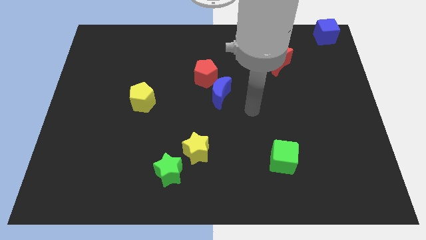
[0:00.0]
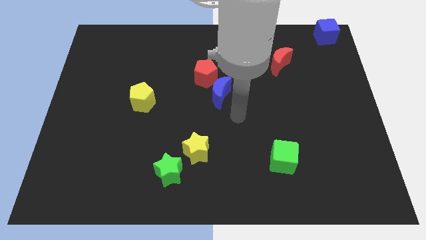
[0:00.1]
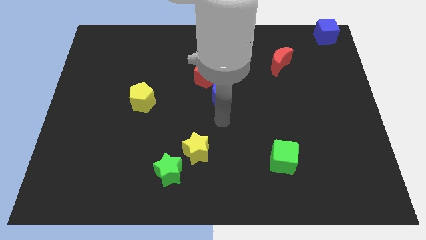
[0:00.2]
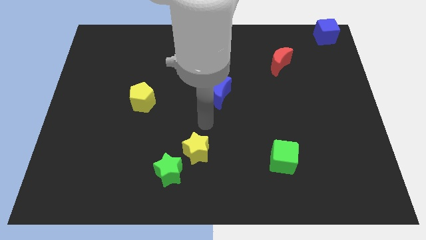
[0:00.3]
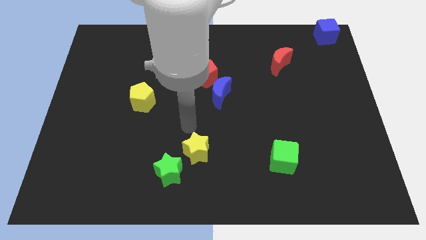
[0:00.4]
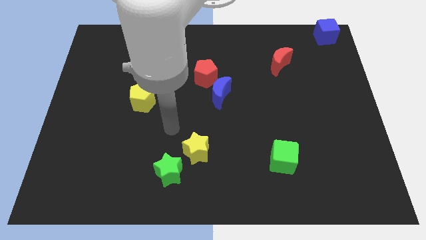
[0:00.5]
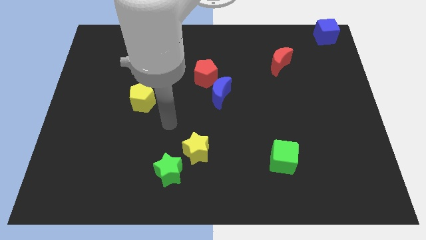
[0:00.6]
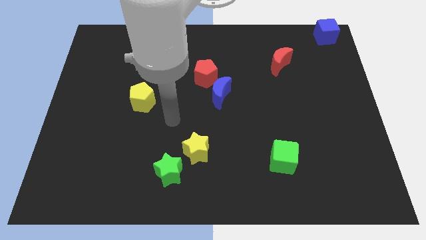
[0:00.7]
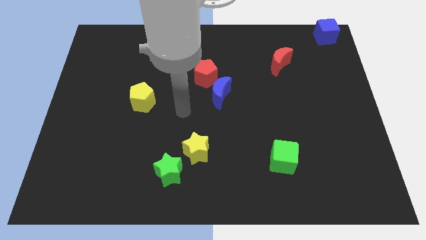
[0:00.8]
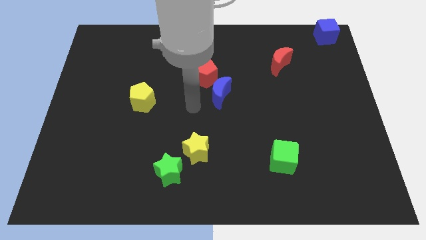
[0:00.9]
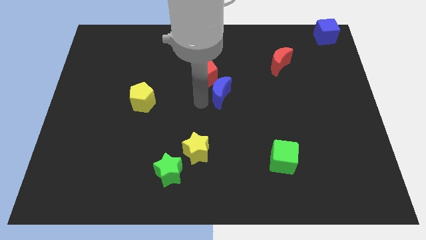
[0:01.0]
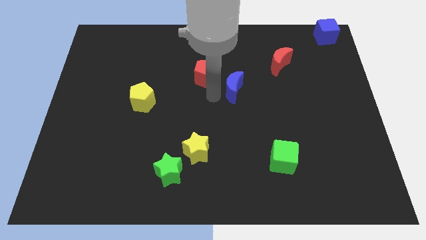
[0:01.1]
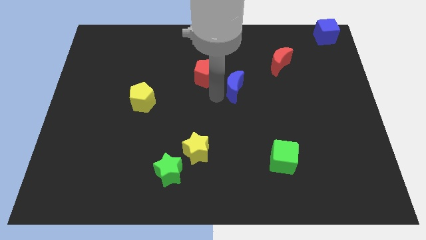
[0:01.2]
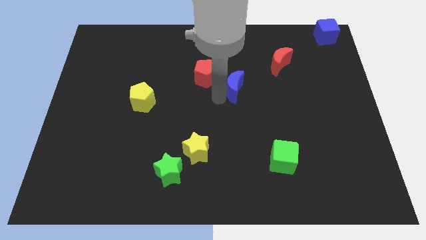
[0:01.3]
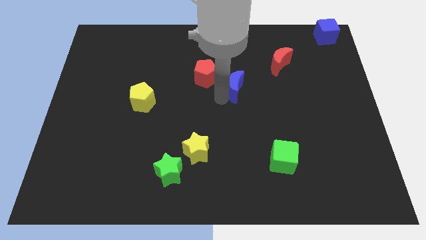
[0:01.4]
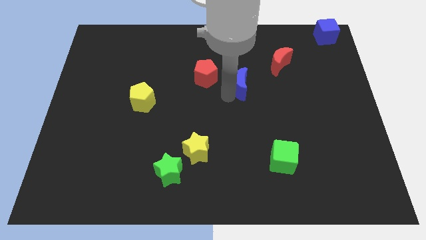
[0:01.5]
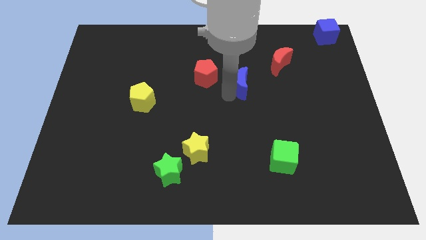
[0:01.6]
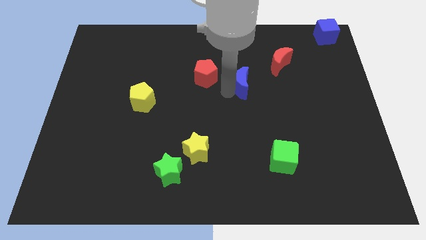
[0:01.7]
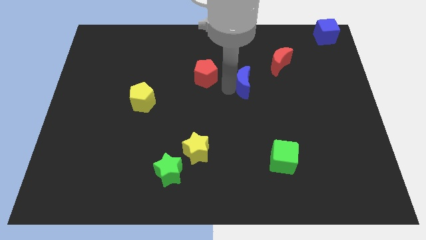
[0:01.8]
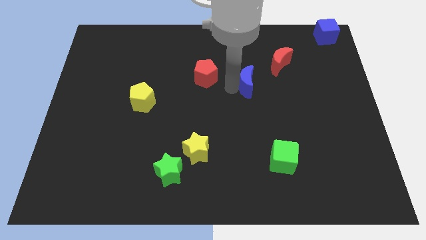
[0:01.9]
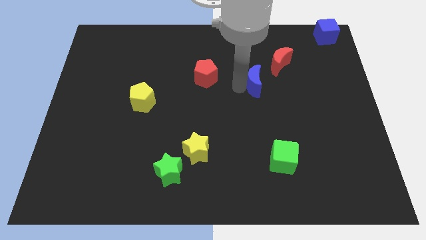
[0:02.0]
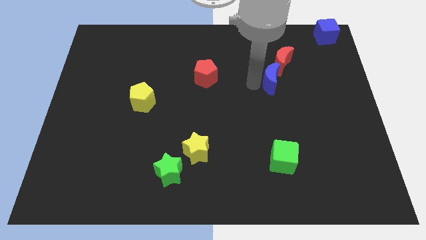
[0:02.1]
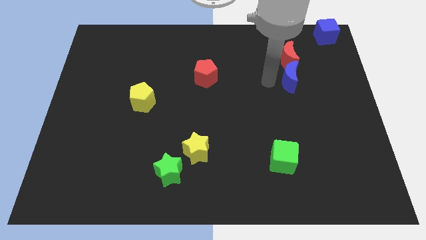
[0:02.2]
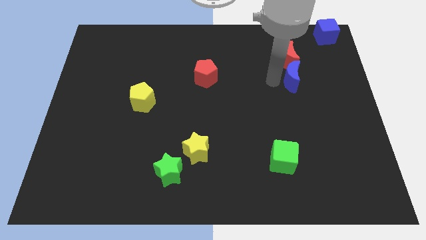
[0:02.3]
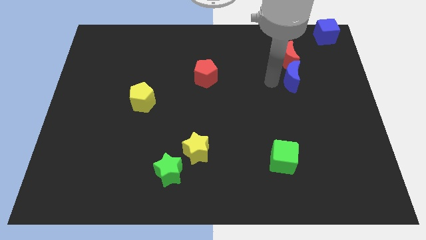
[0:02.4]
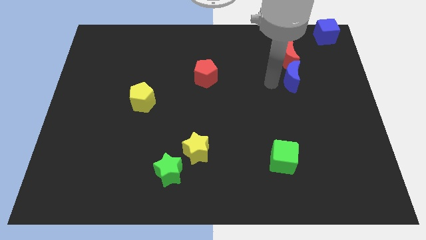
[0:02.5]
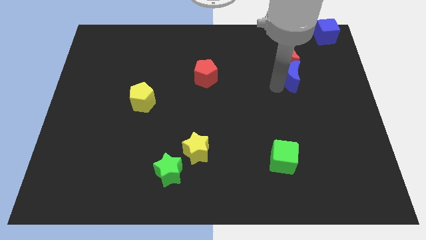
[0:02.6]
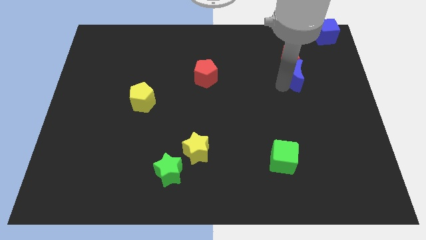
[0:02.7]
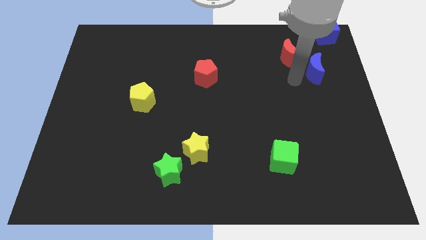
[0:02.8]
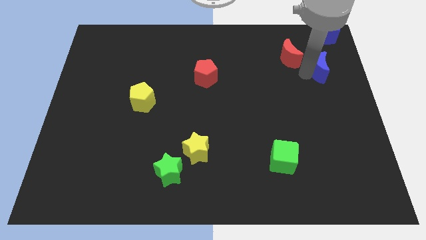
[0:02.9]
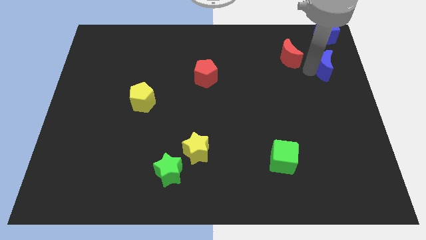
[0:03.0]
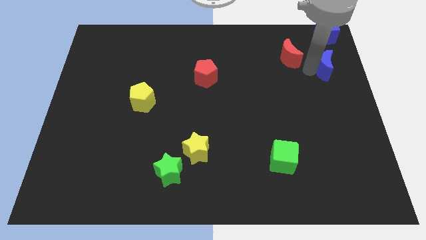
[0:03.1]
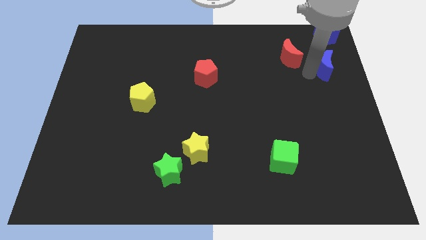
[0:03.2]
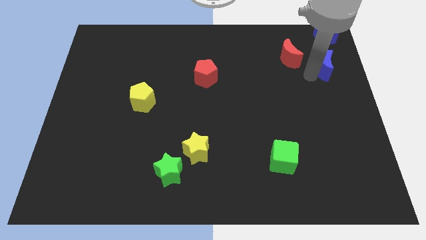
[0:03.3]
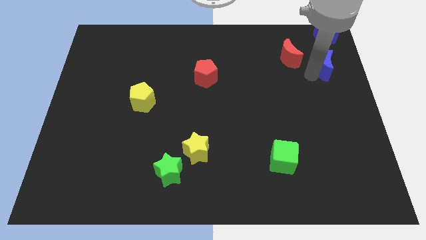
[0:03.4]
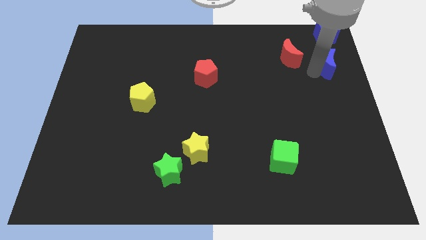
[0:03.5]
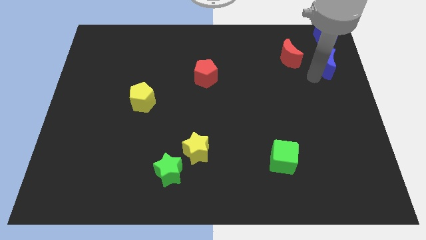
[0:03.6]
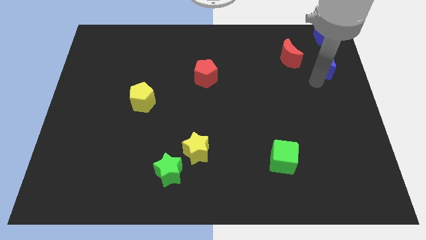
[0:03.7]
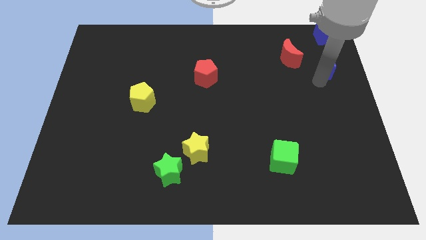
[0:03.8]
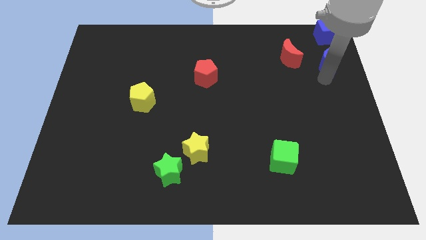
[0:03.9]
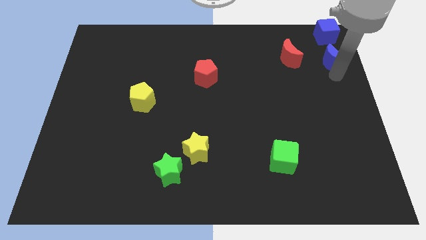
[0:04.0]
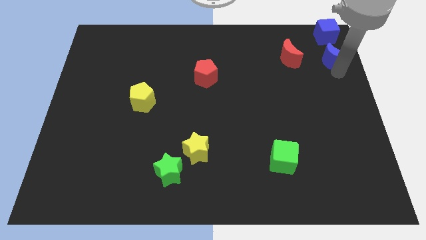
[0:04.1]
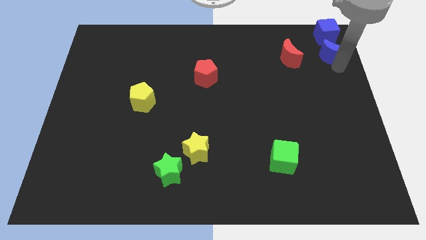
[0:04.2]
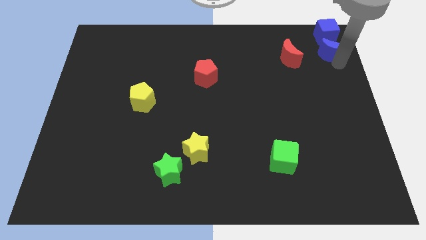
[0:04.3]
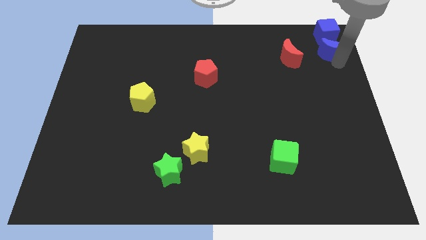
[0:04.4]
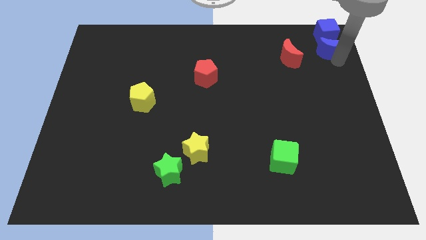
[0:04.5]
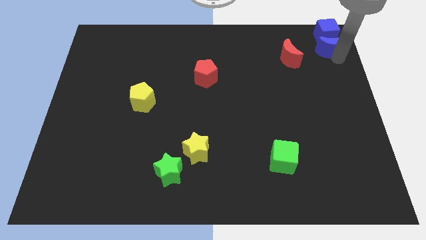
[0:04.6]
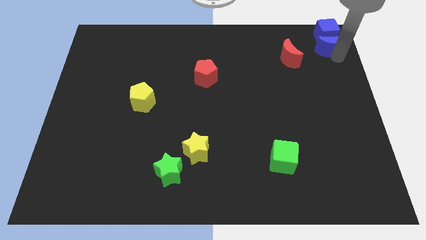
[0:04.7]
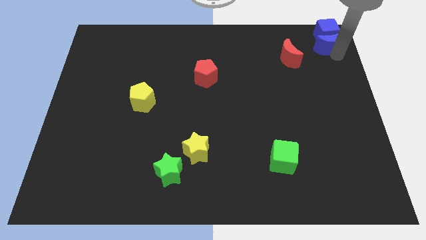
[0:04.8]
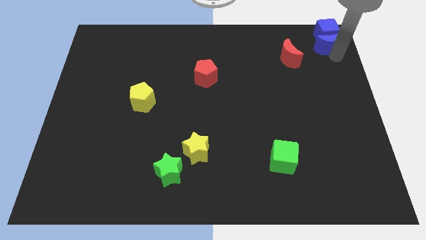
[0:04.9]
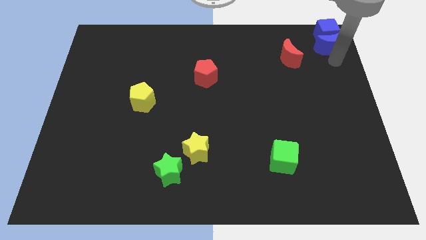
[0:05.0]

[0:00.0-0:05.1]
group up the blue blocks at the top right corner of the board

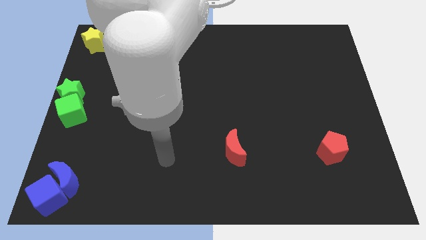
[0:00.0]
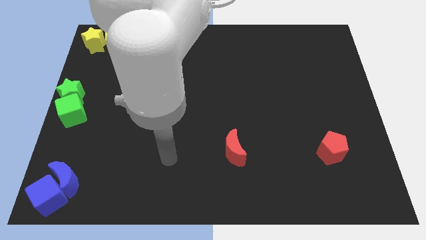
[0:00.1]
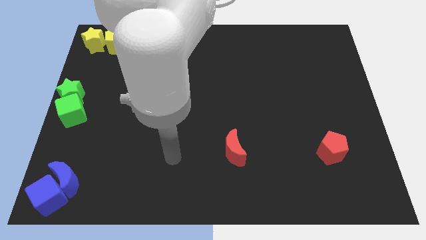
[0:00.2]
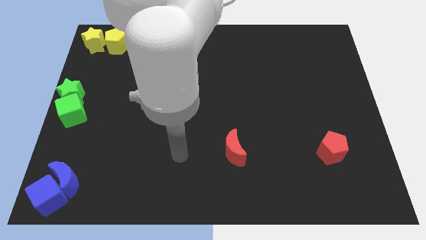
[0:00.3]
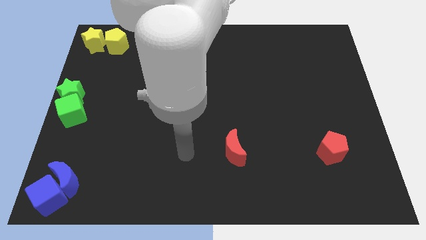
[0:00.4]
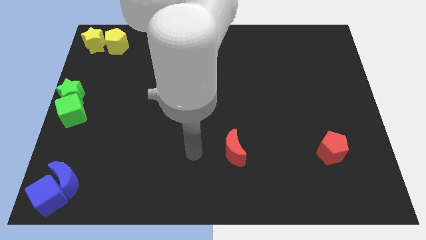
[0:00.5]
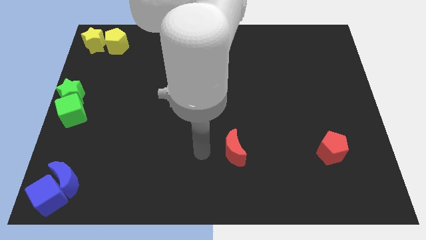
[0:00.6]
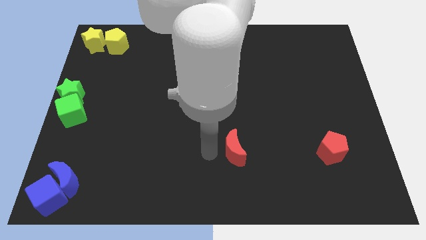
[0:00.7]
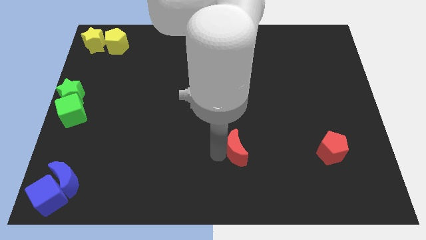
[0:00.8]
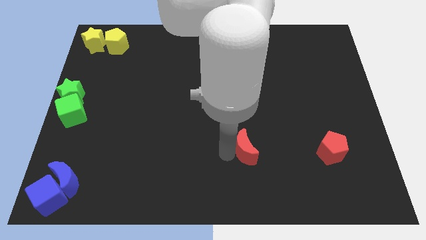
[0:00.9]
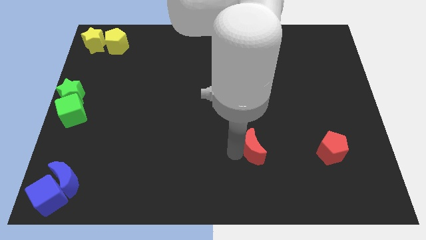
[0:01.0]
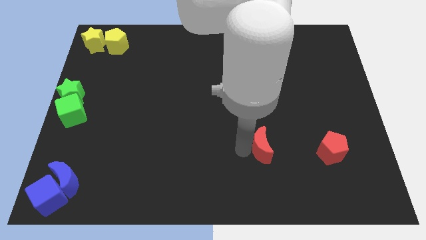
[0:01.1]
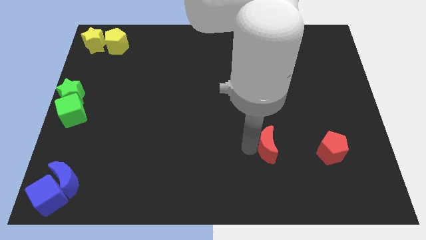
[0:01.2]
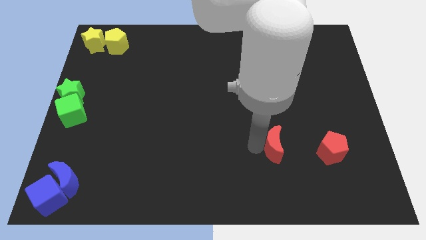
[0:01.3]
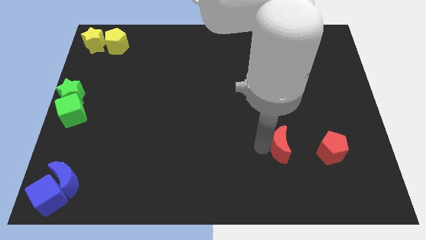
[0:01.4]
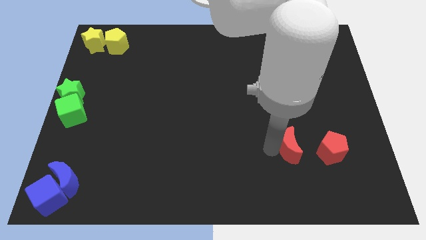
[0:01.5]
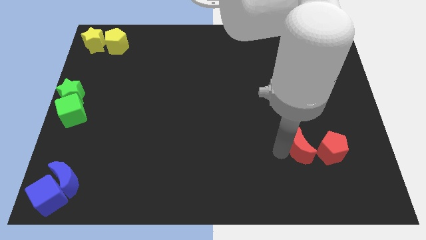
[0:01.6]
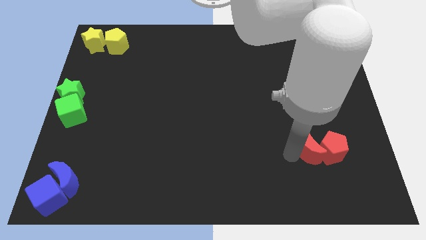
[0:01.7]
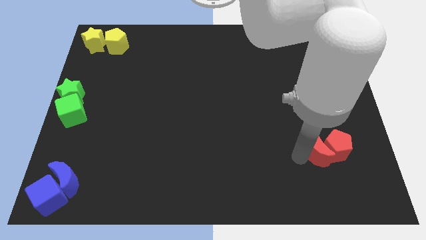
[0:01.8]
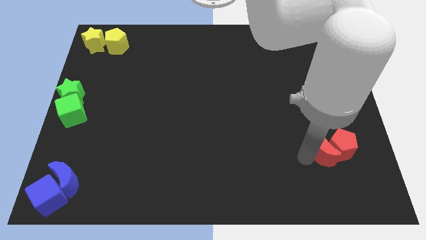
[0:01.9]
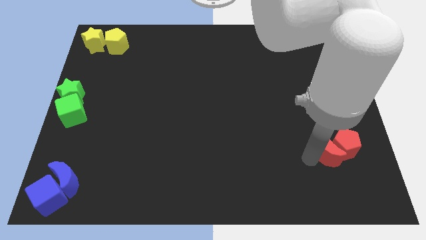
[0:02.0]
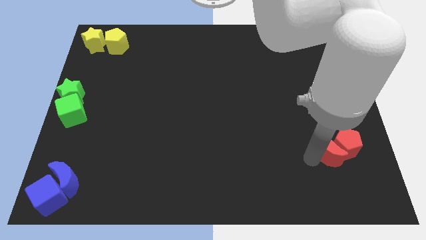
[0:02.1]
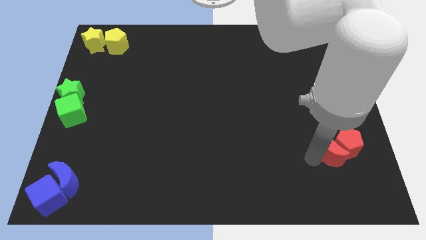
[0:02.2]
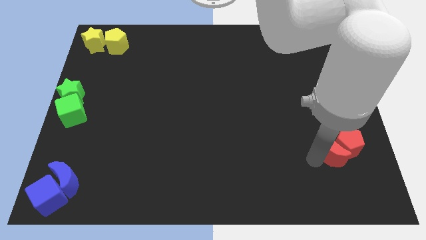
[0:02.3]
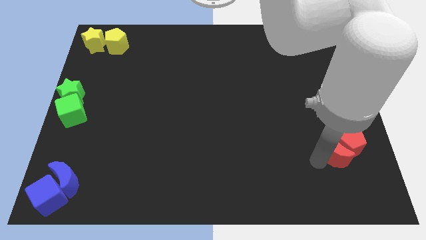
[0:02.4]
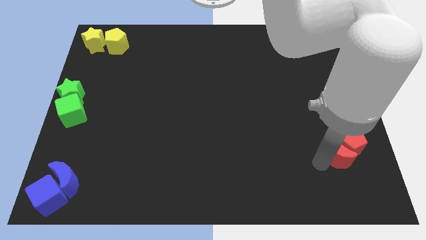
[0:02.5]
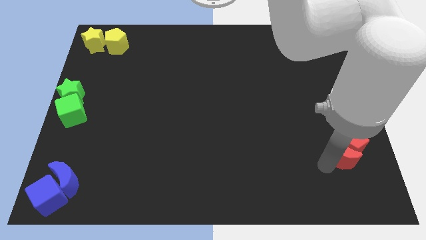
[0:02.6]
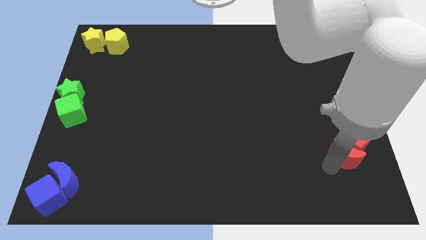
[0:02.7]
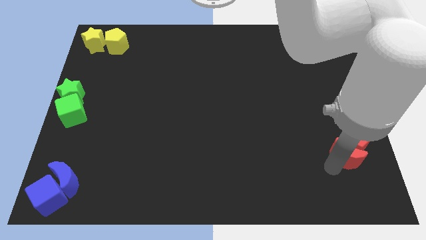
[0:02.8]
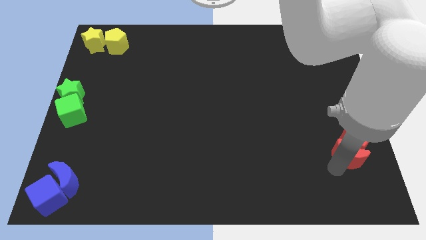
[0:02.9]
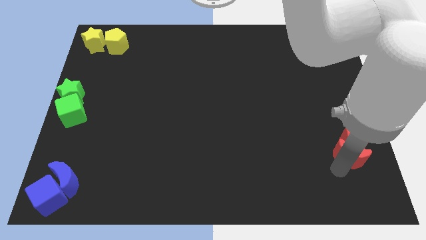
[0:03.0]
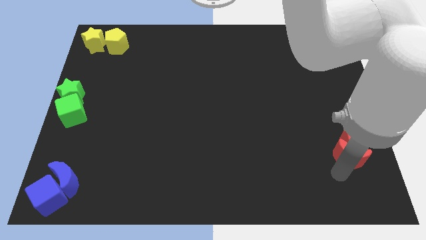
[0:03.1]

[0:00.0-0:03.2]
push red crescent into the red pentagon

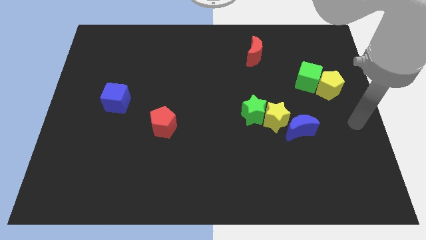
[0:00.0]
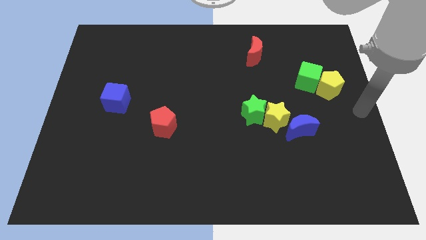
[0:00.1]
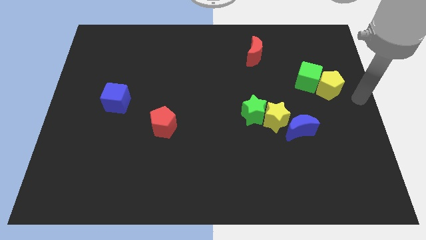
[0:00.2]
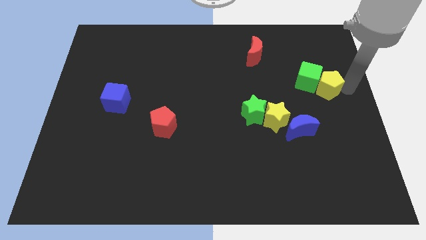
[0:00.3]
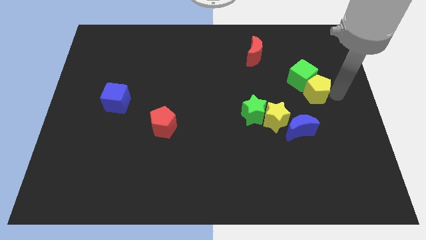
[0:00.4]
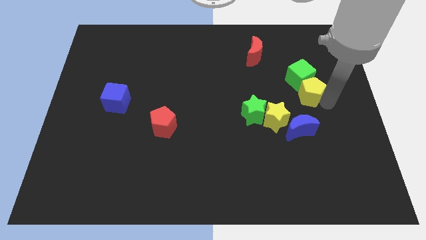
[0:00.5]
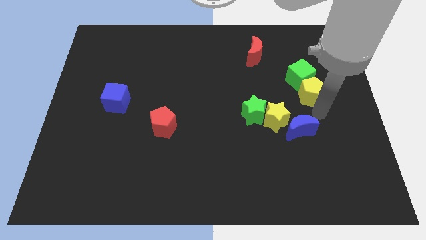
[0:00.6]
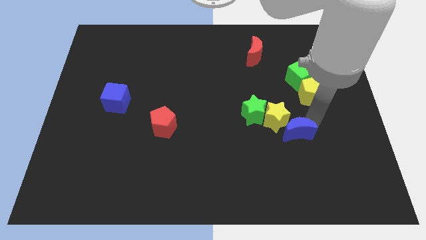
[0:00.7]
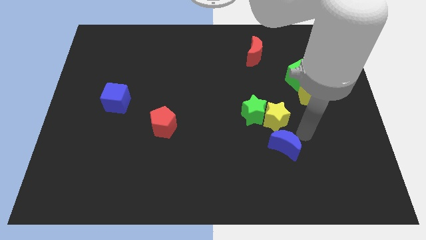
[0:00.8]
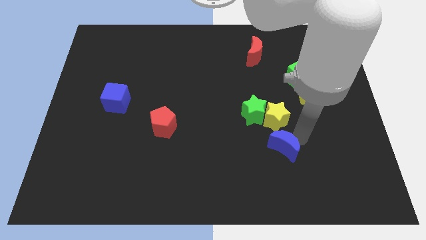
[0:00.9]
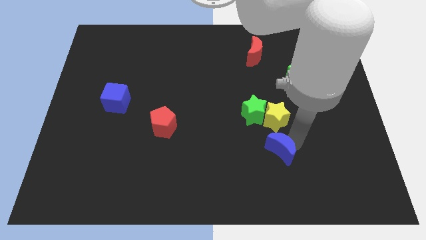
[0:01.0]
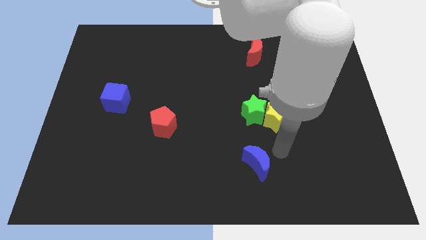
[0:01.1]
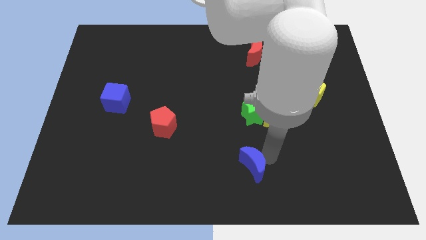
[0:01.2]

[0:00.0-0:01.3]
push the blue crescent to the bottom of the green star
